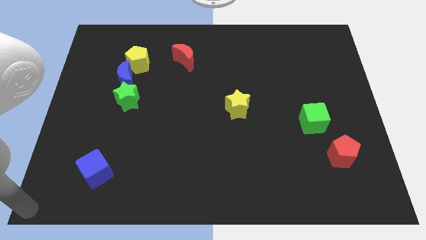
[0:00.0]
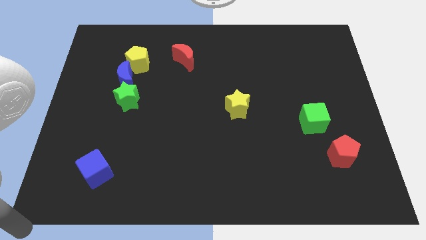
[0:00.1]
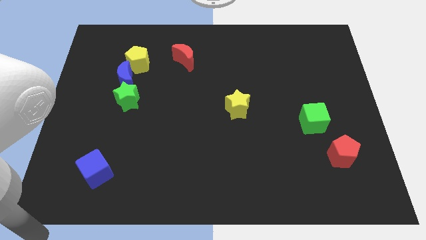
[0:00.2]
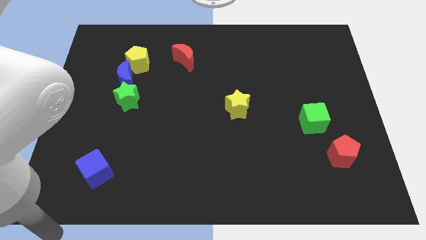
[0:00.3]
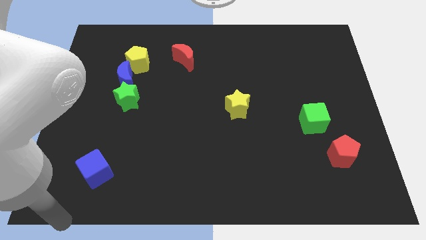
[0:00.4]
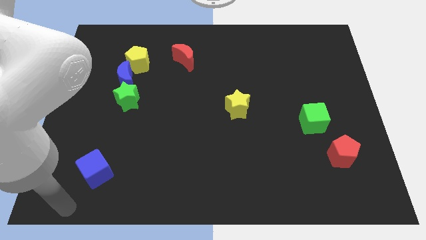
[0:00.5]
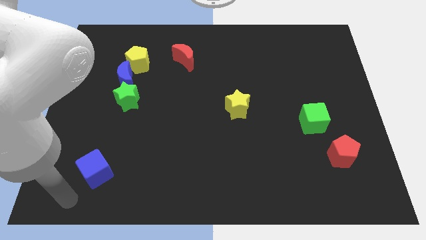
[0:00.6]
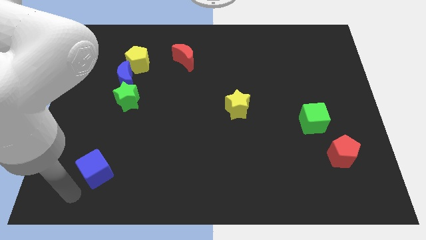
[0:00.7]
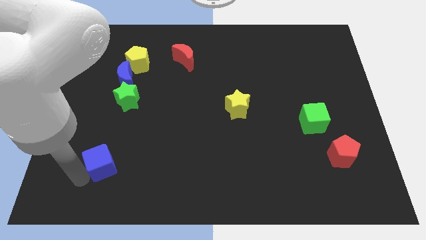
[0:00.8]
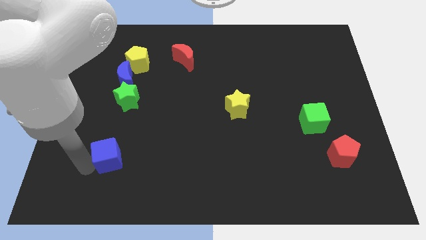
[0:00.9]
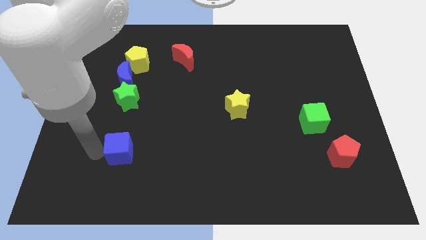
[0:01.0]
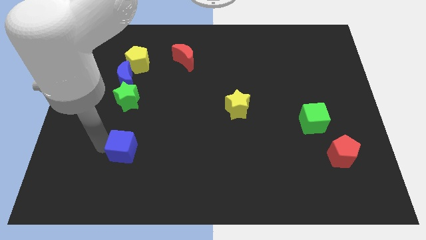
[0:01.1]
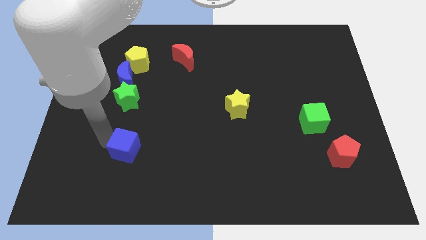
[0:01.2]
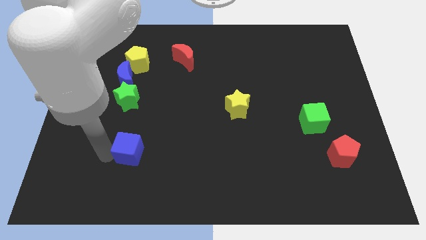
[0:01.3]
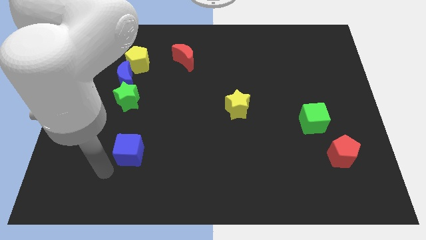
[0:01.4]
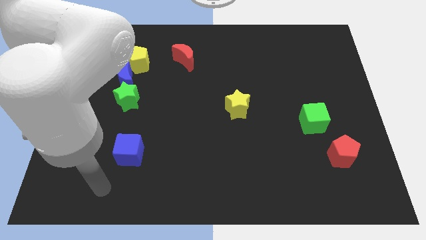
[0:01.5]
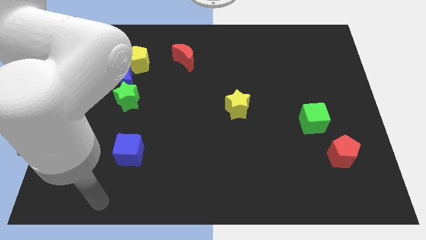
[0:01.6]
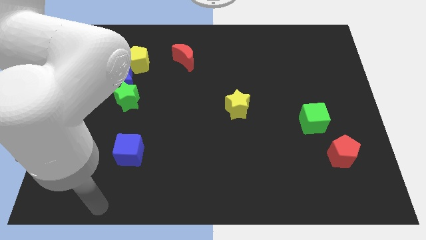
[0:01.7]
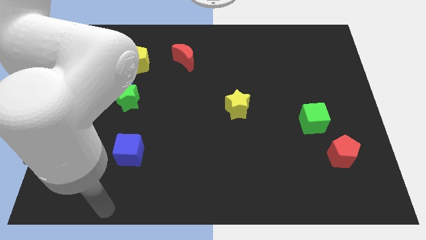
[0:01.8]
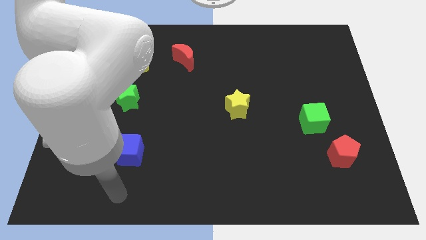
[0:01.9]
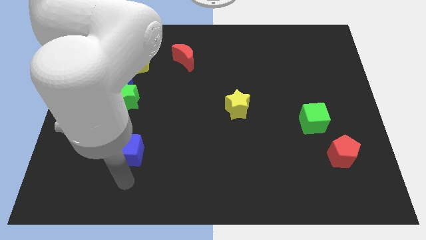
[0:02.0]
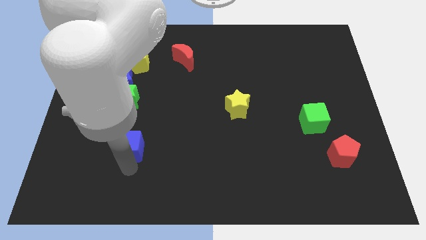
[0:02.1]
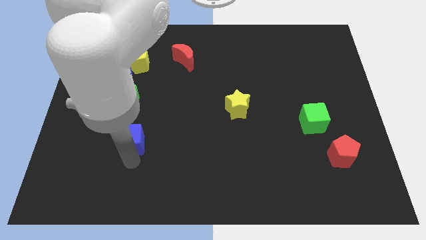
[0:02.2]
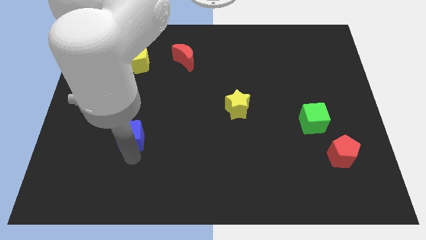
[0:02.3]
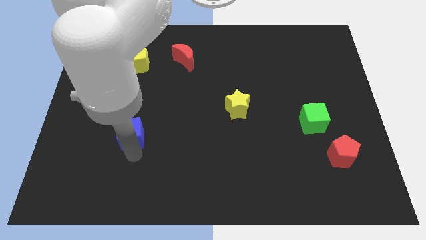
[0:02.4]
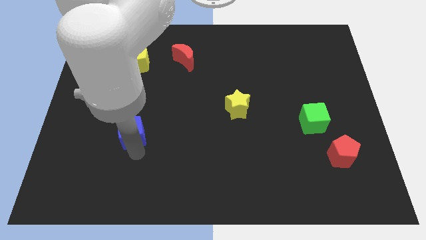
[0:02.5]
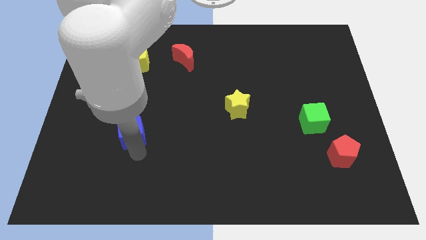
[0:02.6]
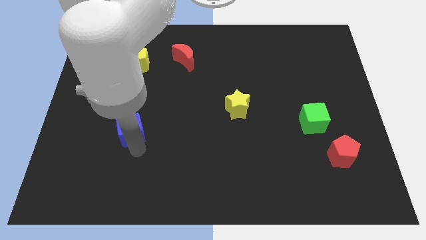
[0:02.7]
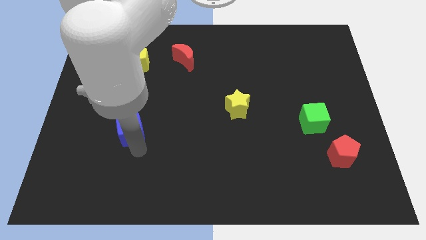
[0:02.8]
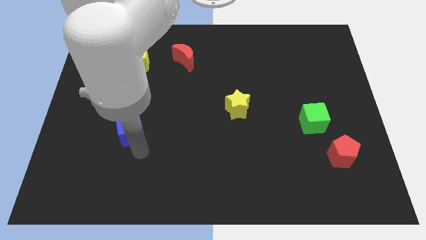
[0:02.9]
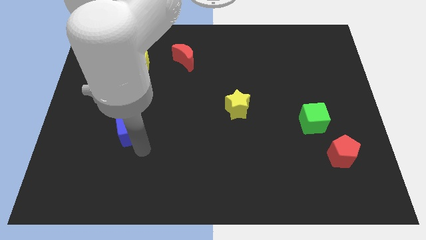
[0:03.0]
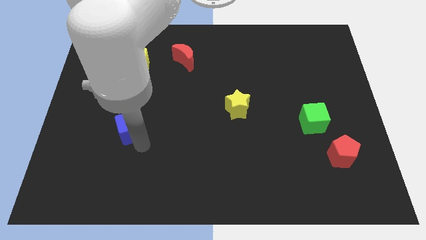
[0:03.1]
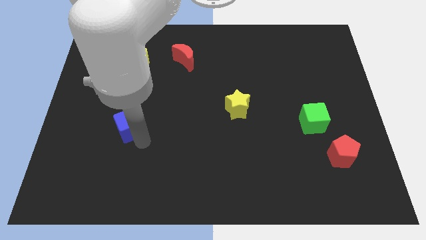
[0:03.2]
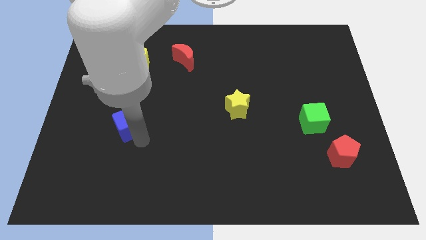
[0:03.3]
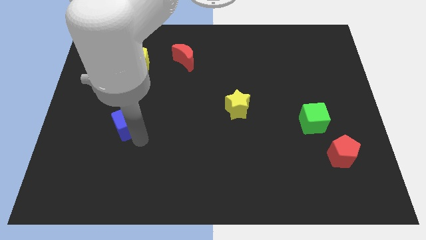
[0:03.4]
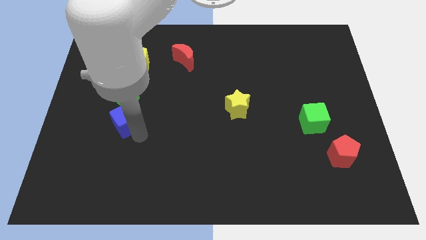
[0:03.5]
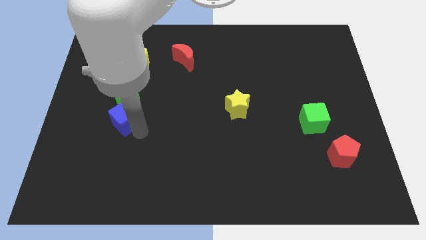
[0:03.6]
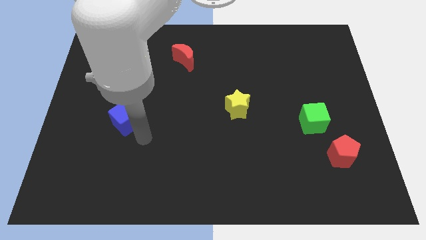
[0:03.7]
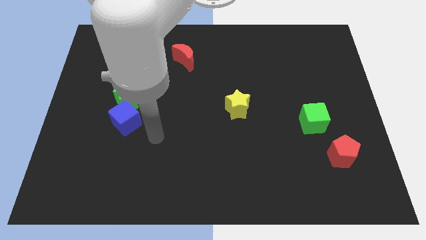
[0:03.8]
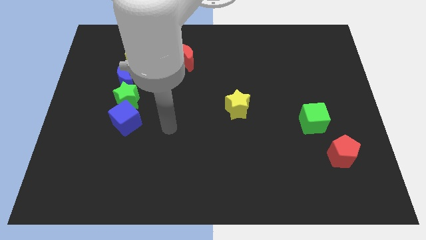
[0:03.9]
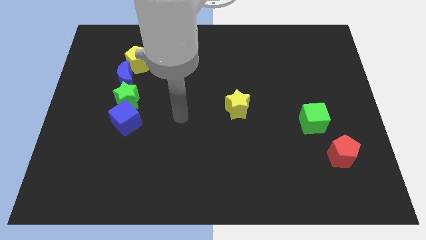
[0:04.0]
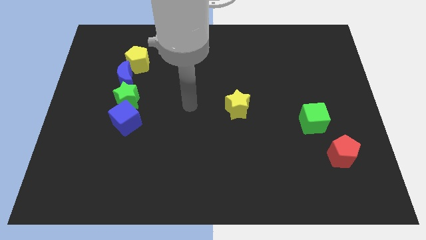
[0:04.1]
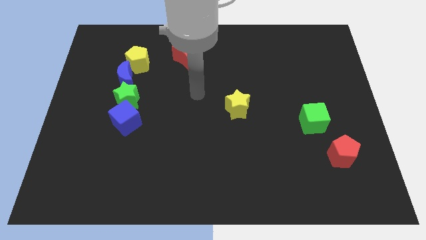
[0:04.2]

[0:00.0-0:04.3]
put the blue cube underneath the green star

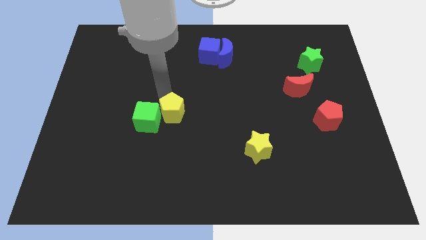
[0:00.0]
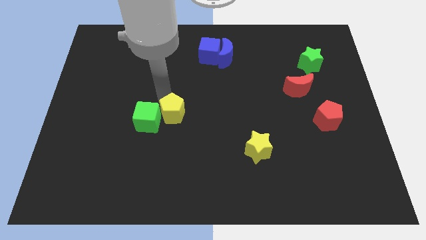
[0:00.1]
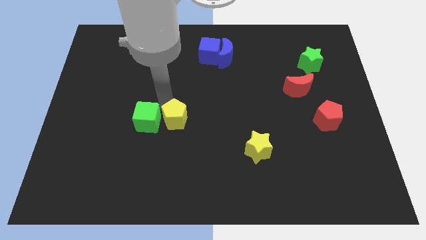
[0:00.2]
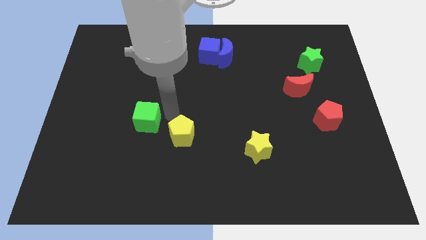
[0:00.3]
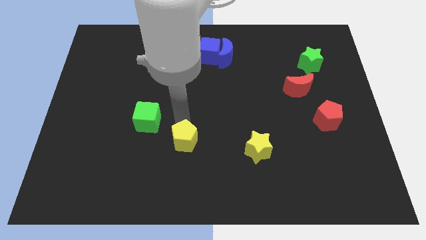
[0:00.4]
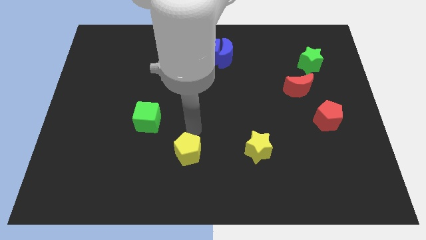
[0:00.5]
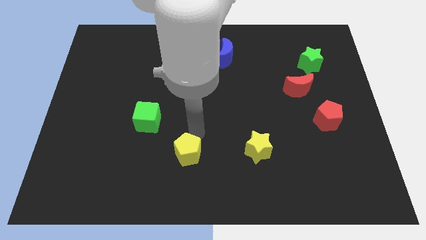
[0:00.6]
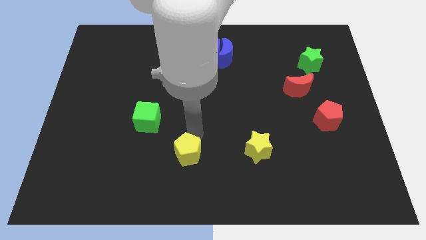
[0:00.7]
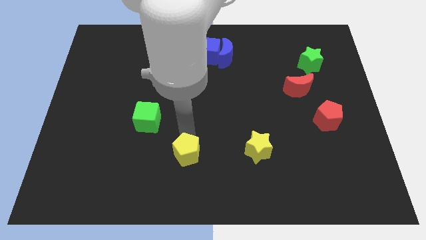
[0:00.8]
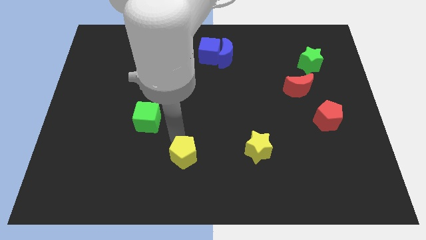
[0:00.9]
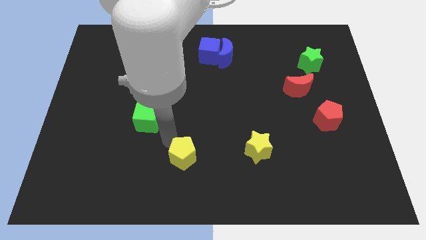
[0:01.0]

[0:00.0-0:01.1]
push the yellow pentagon to the left of the yellow star

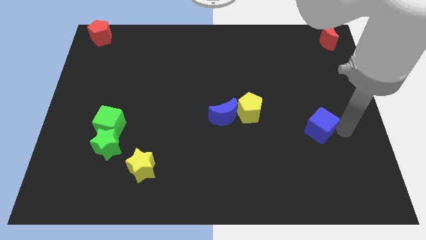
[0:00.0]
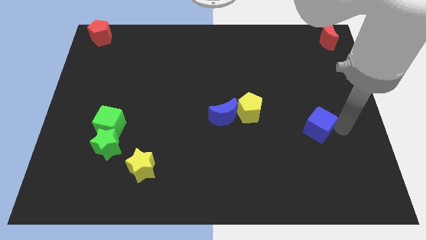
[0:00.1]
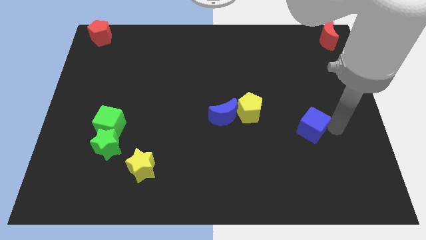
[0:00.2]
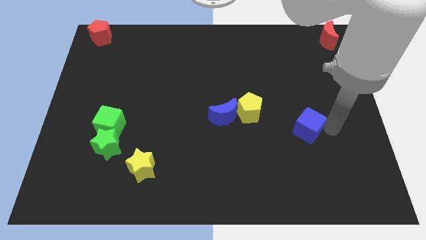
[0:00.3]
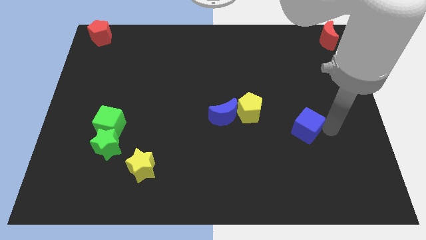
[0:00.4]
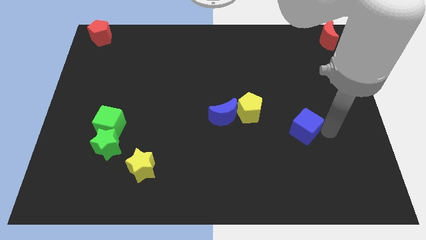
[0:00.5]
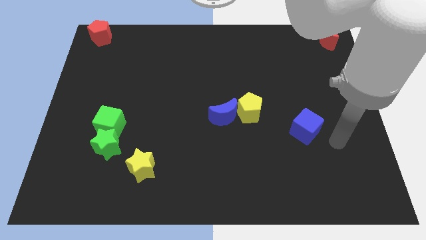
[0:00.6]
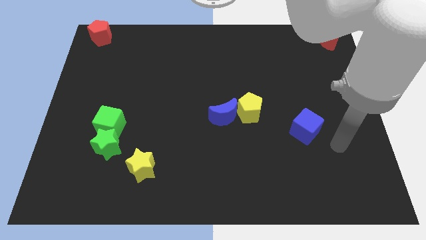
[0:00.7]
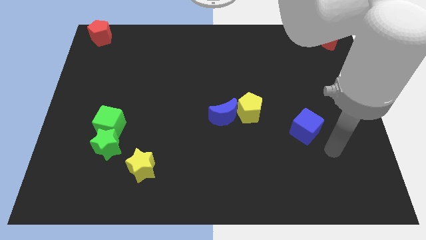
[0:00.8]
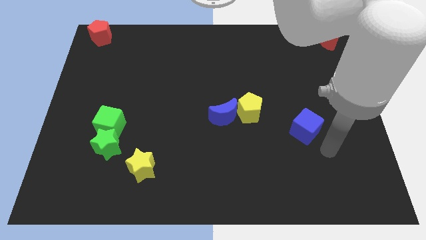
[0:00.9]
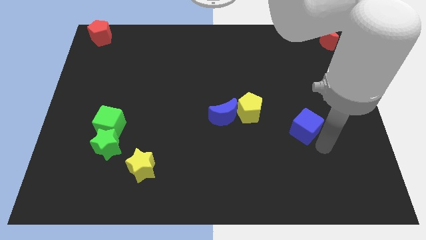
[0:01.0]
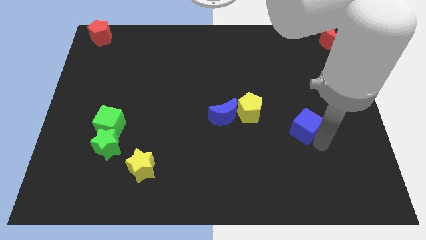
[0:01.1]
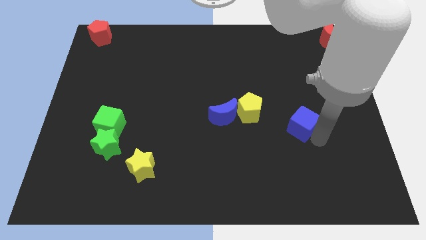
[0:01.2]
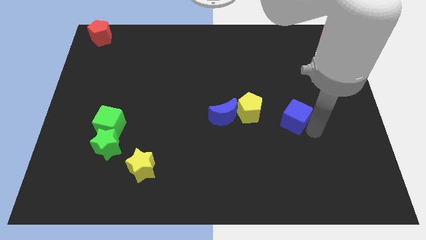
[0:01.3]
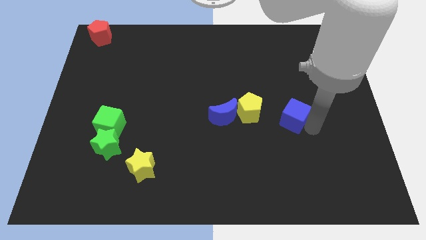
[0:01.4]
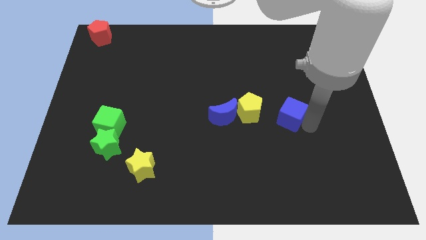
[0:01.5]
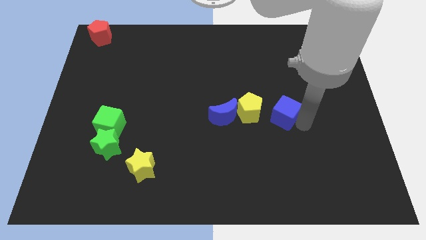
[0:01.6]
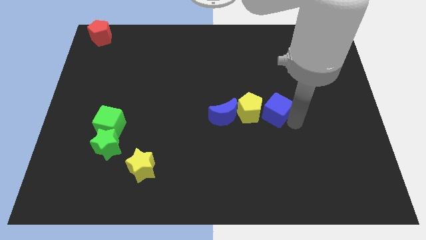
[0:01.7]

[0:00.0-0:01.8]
push the blue cube to the right of the yellow pentagon

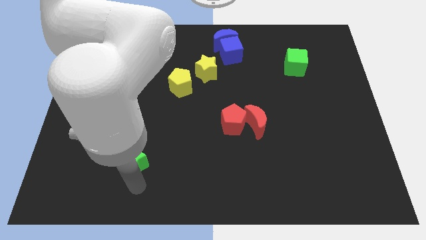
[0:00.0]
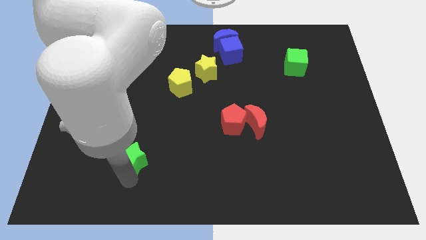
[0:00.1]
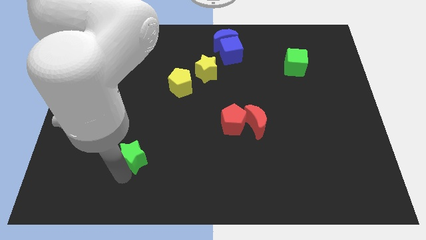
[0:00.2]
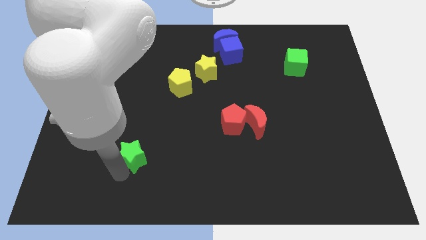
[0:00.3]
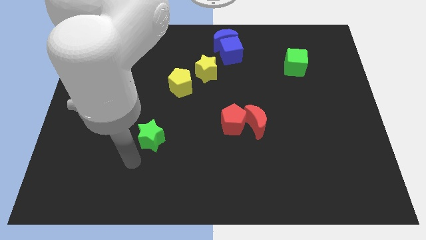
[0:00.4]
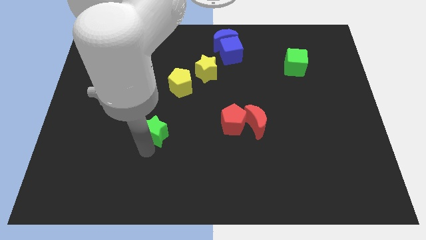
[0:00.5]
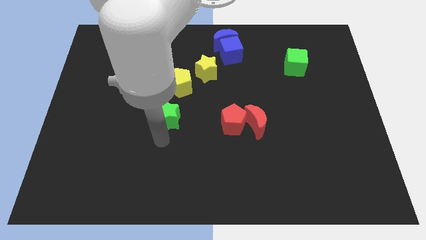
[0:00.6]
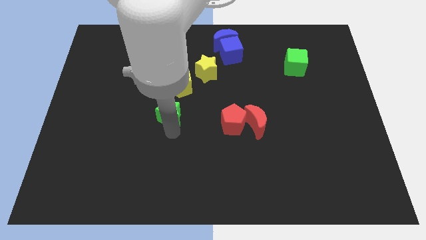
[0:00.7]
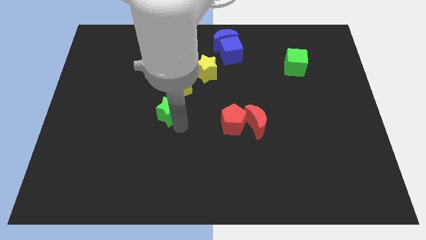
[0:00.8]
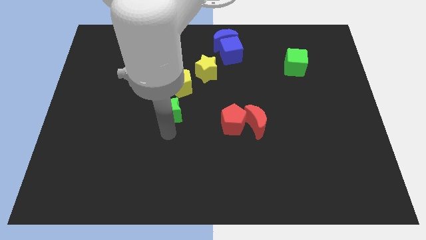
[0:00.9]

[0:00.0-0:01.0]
place the green star diagonally bottom left of the yellow pentagon

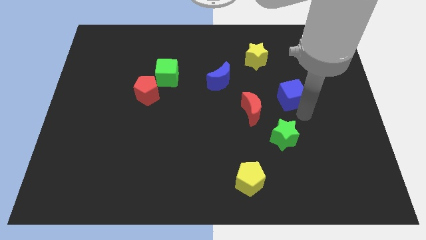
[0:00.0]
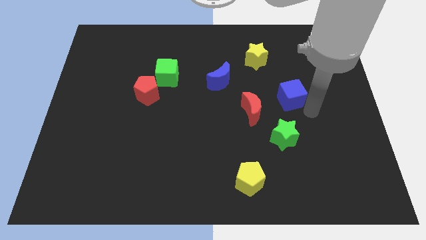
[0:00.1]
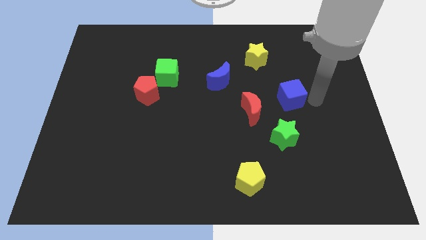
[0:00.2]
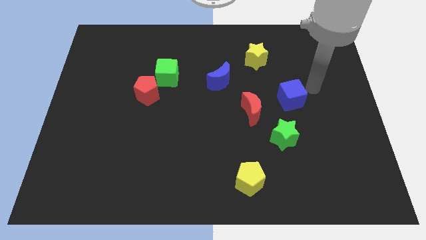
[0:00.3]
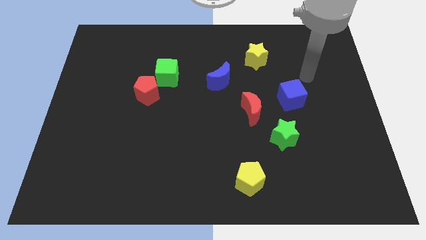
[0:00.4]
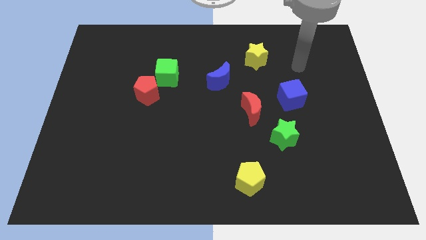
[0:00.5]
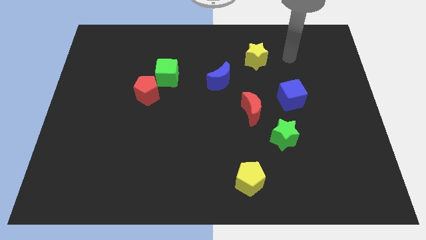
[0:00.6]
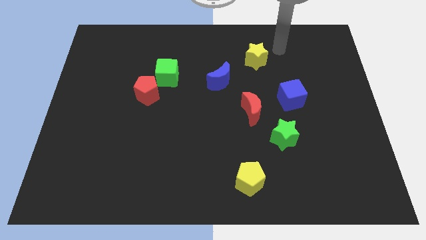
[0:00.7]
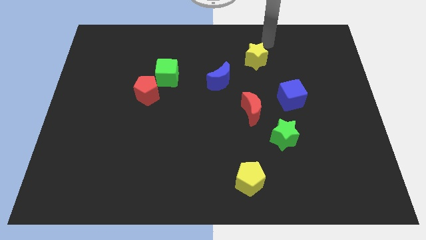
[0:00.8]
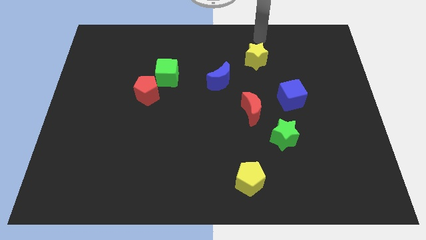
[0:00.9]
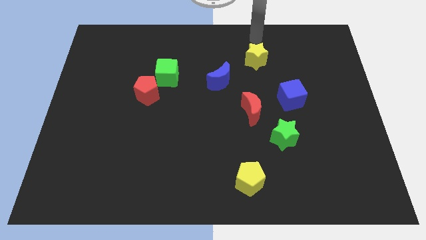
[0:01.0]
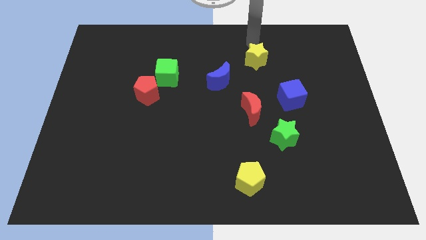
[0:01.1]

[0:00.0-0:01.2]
place your arm to the top of yellow star
